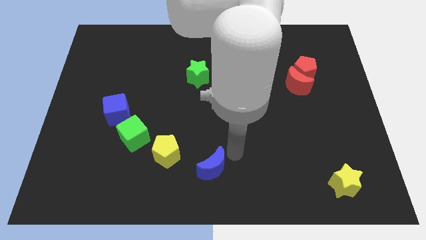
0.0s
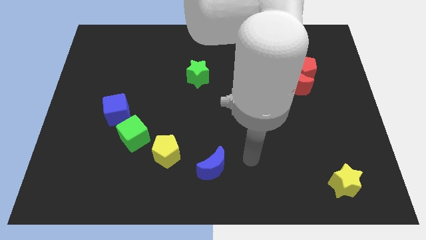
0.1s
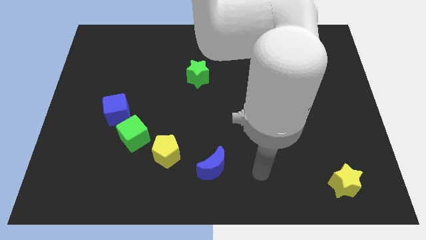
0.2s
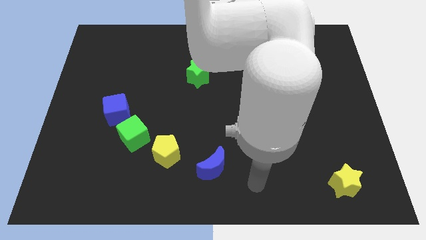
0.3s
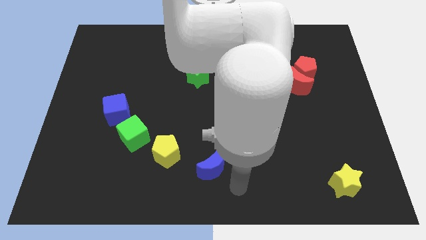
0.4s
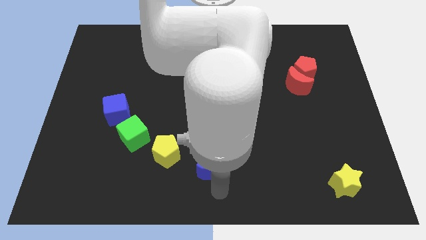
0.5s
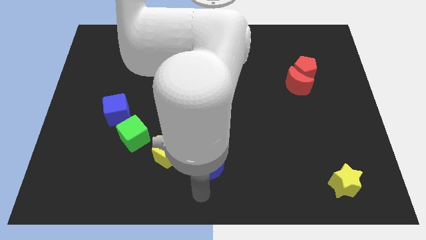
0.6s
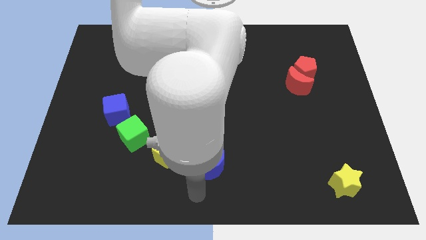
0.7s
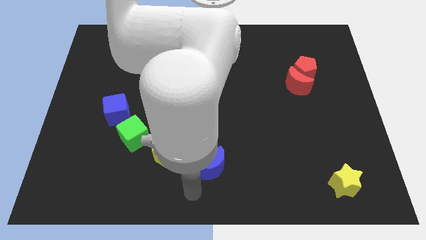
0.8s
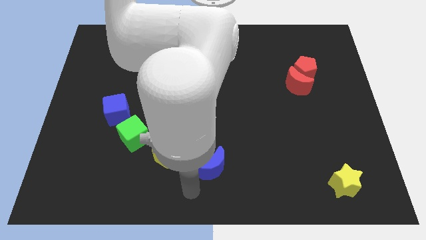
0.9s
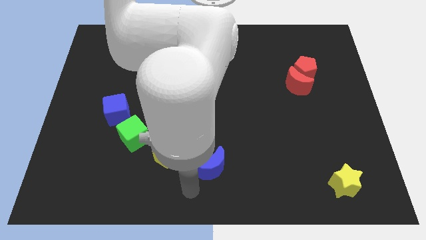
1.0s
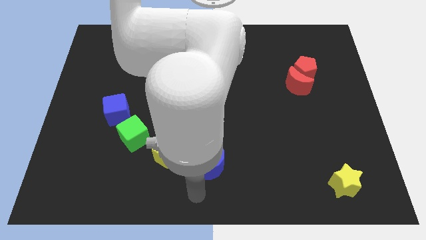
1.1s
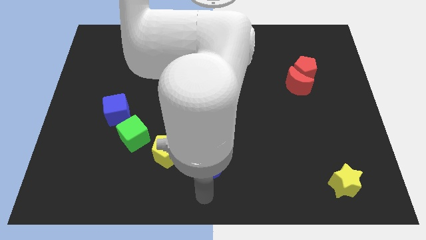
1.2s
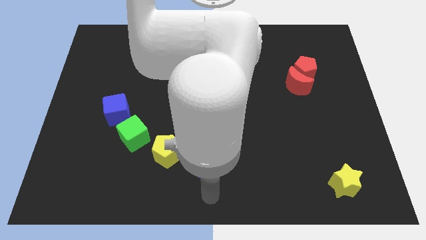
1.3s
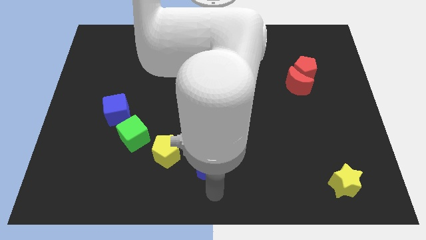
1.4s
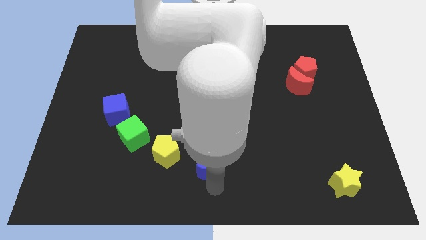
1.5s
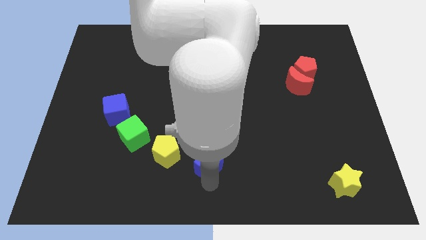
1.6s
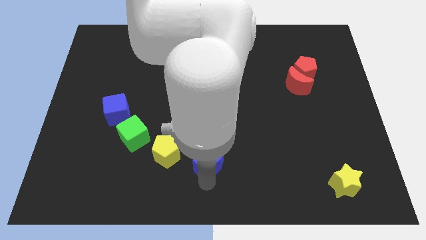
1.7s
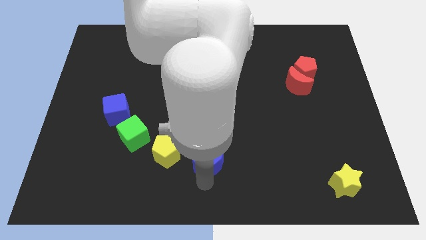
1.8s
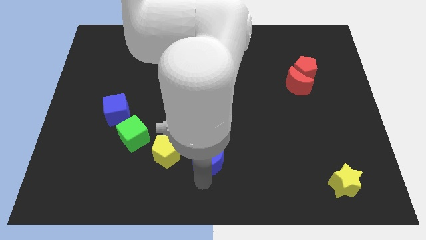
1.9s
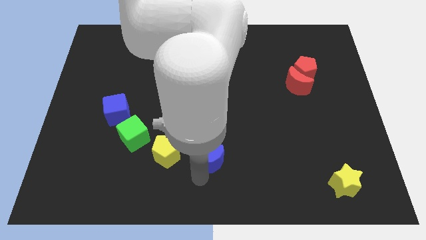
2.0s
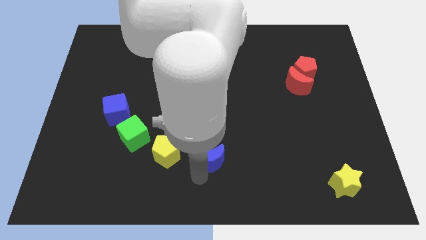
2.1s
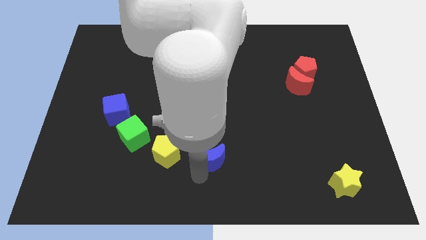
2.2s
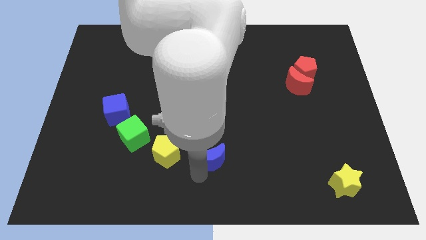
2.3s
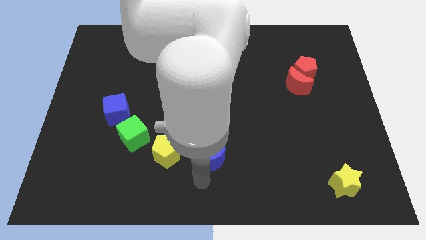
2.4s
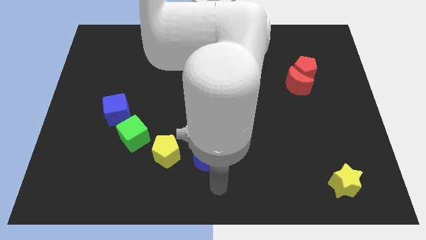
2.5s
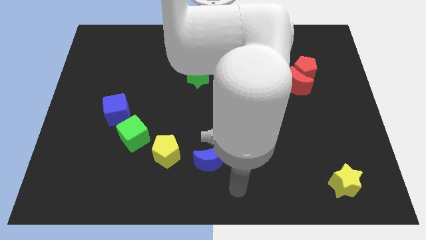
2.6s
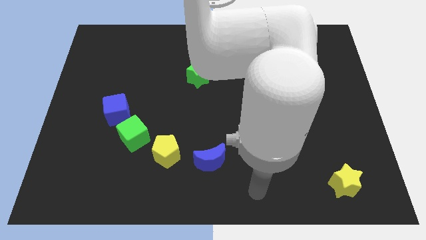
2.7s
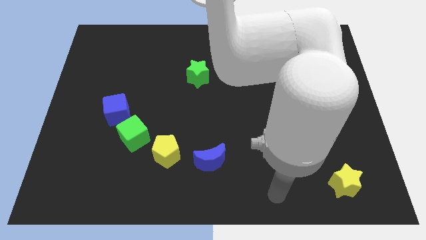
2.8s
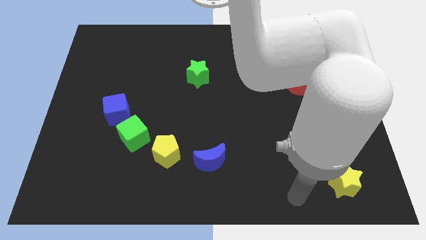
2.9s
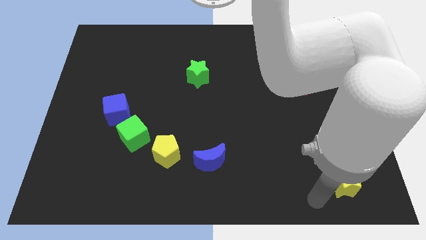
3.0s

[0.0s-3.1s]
place the blue crescent to the right side of the yellow pentagon

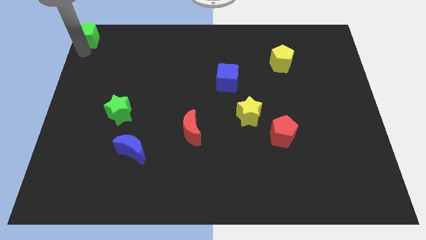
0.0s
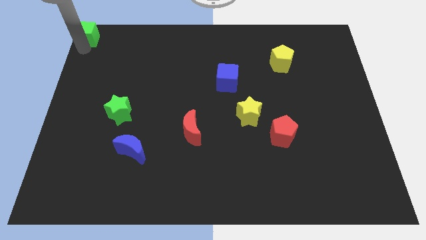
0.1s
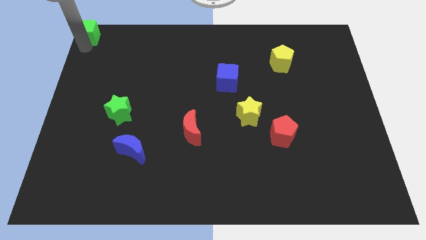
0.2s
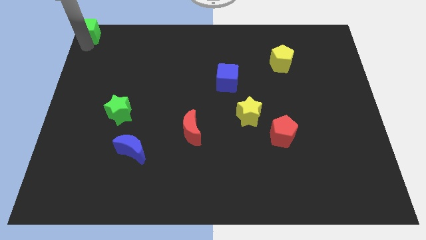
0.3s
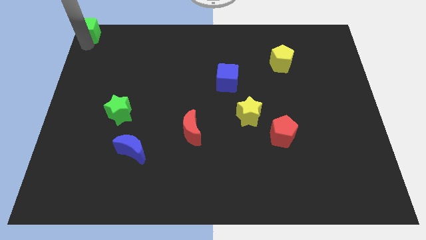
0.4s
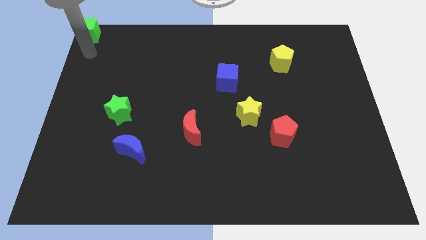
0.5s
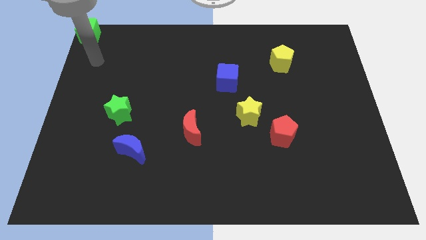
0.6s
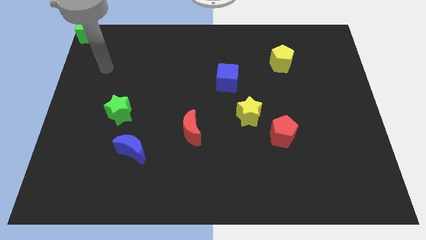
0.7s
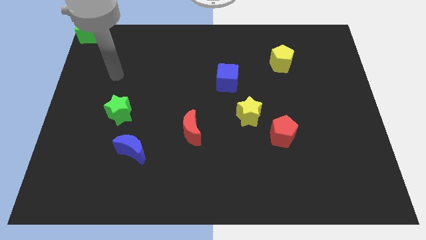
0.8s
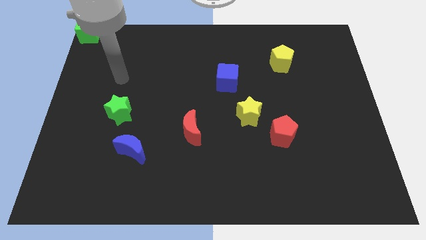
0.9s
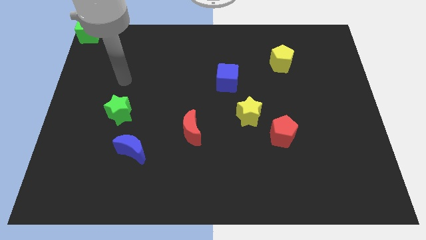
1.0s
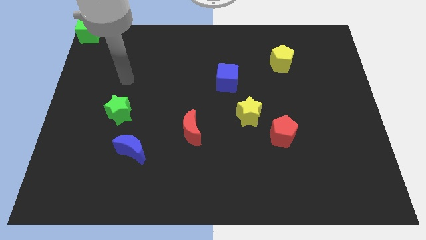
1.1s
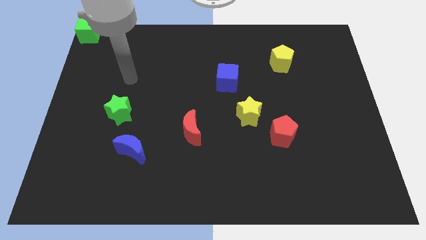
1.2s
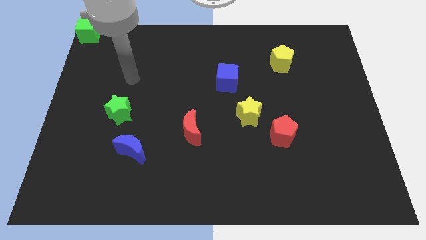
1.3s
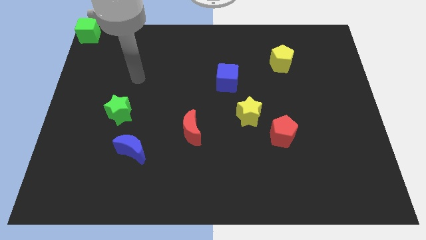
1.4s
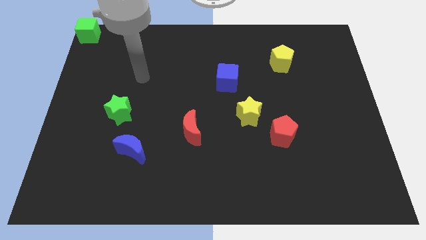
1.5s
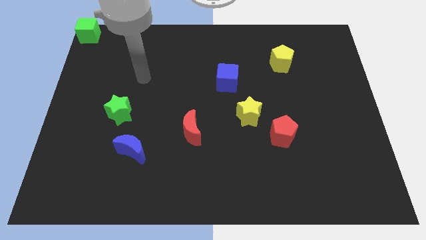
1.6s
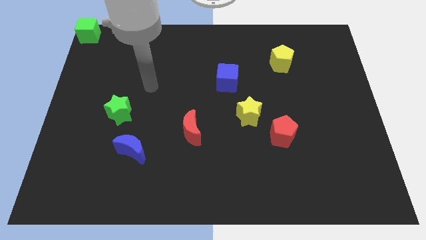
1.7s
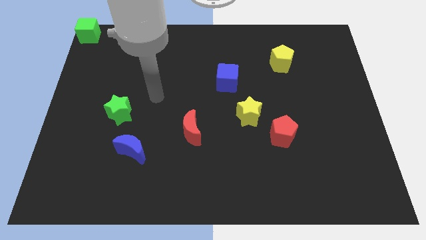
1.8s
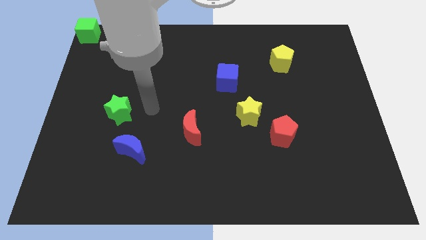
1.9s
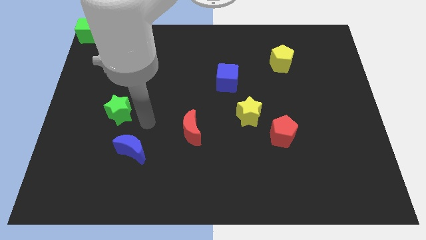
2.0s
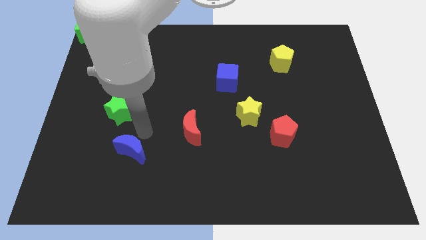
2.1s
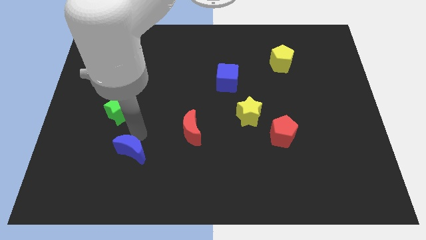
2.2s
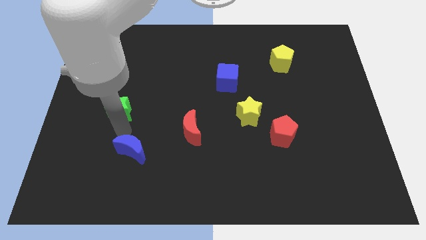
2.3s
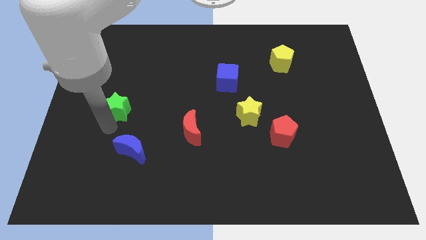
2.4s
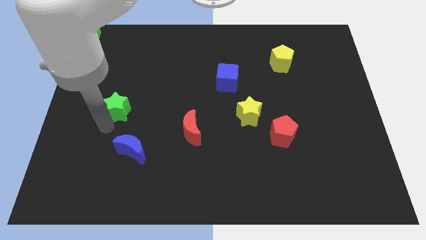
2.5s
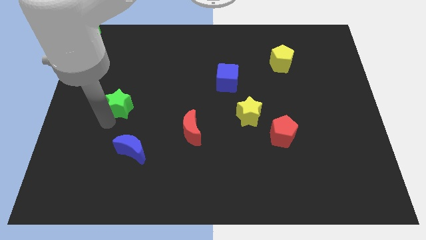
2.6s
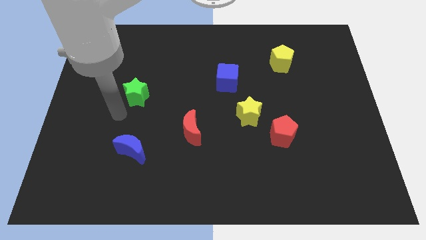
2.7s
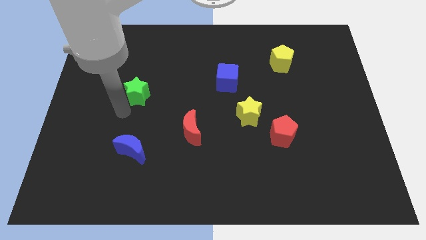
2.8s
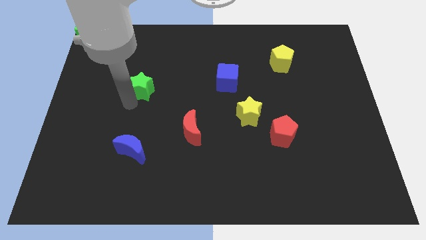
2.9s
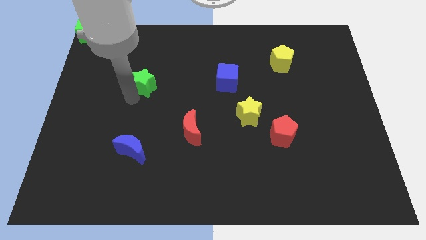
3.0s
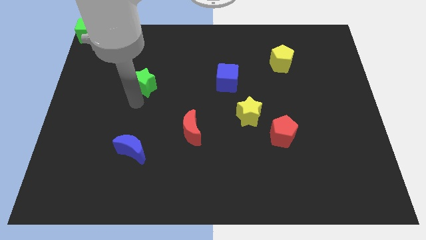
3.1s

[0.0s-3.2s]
slightly move green star towards upward

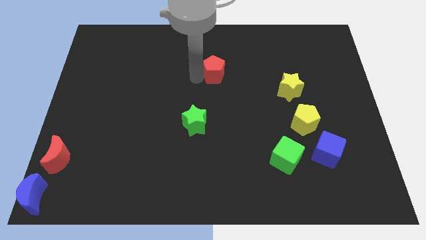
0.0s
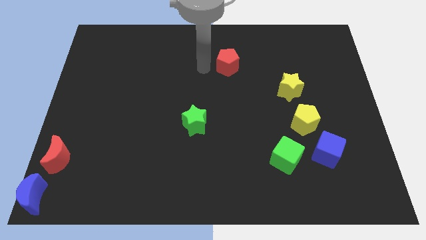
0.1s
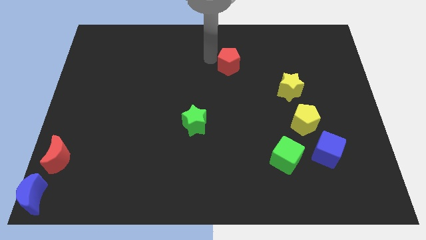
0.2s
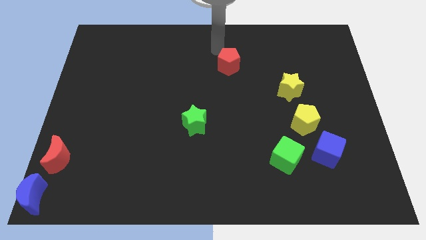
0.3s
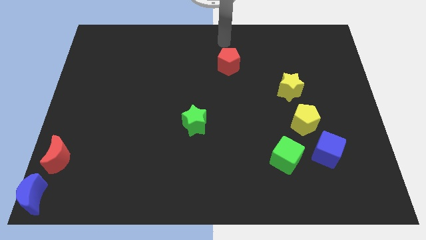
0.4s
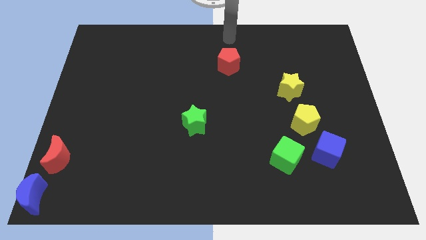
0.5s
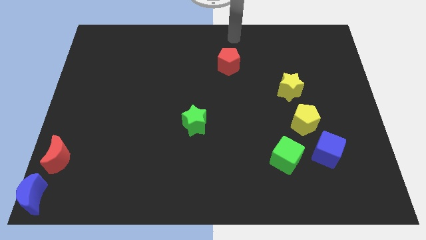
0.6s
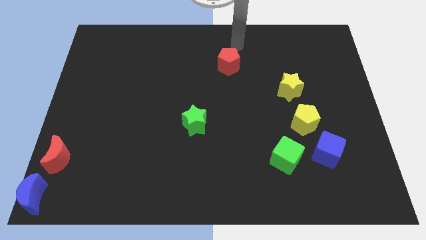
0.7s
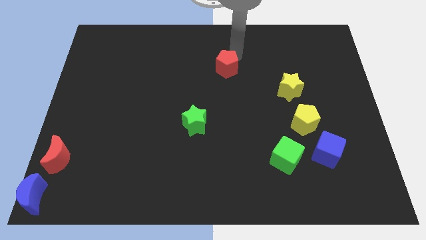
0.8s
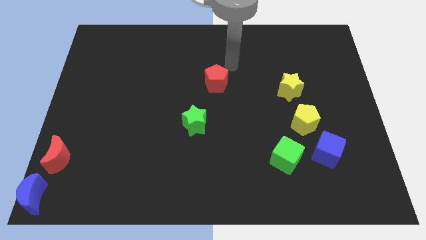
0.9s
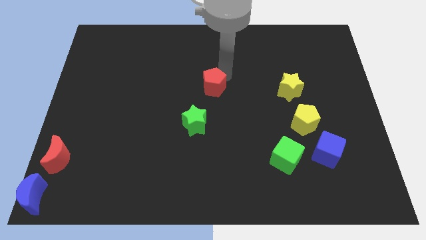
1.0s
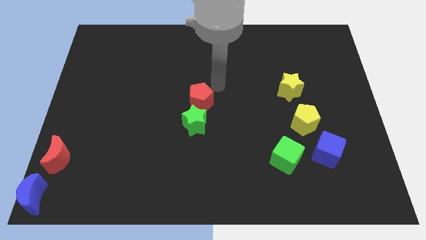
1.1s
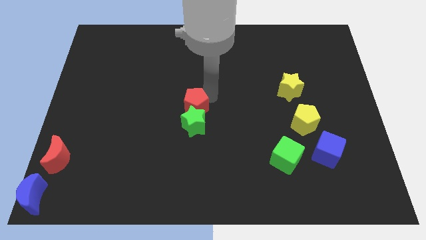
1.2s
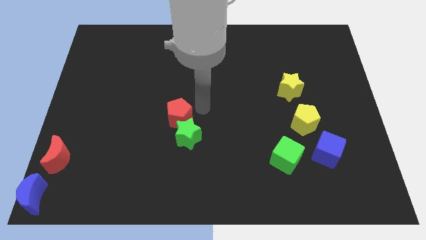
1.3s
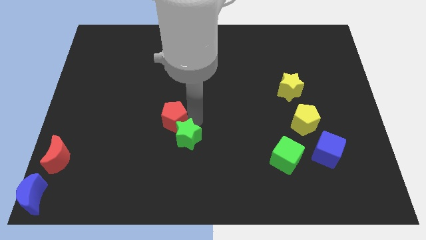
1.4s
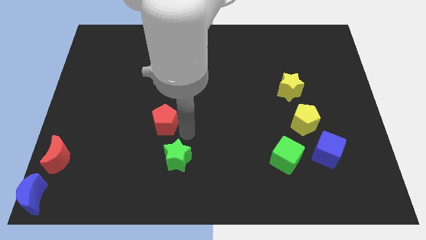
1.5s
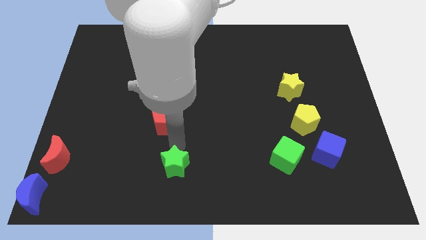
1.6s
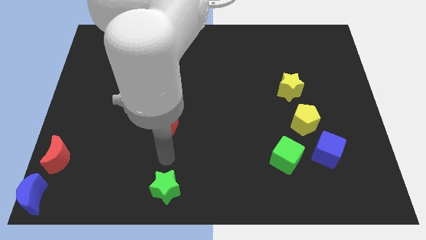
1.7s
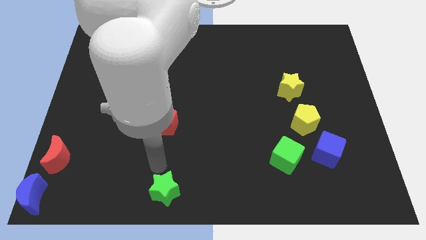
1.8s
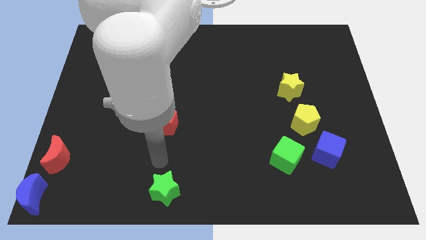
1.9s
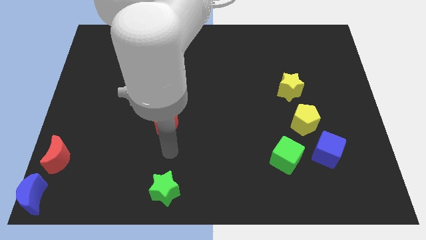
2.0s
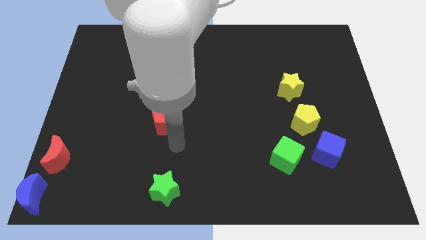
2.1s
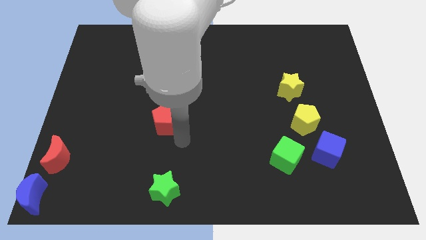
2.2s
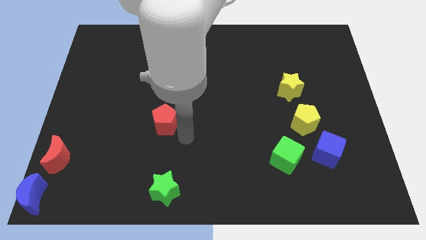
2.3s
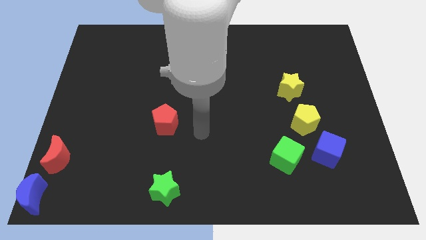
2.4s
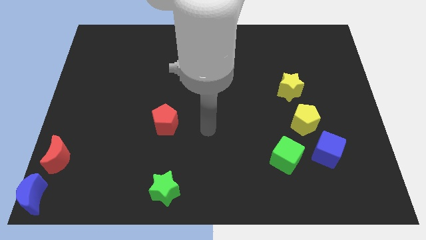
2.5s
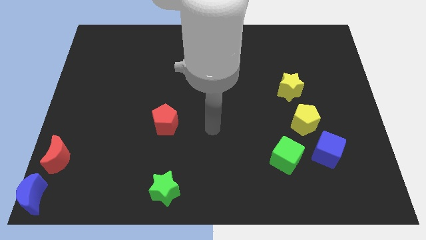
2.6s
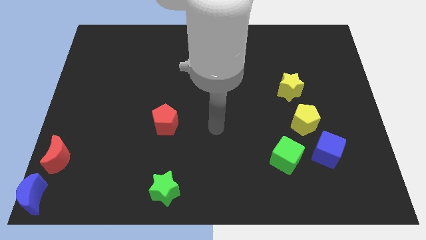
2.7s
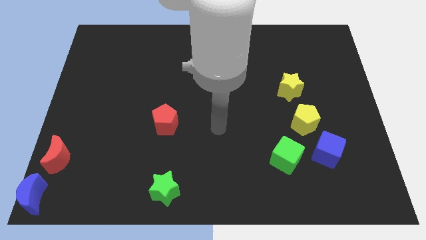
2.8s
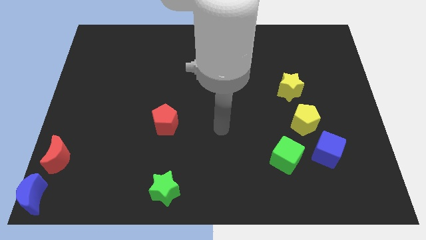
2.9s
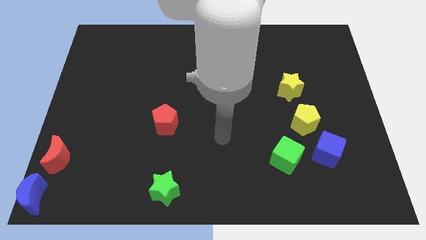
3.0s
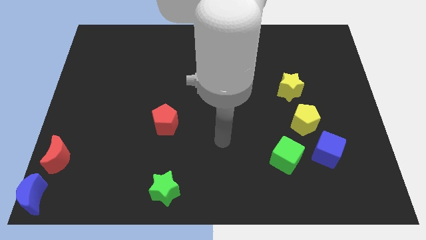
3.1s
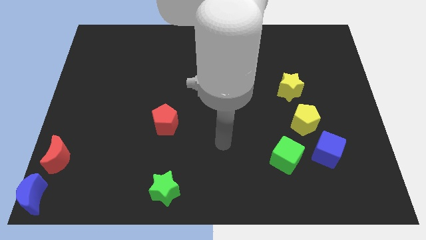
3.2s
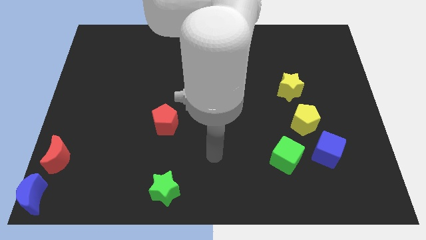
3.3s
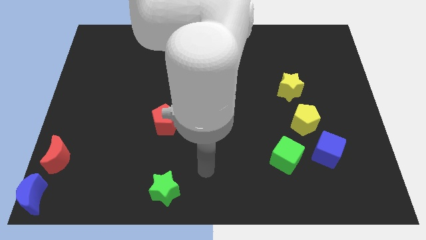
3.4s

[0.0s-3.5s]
push the green star to the bottom centre of the board
